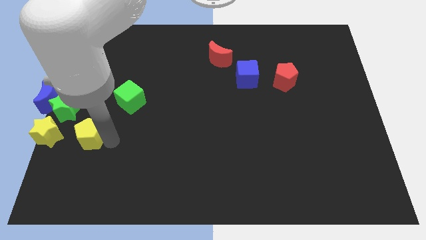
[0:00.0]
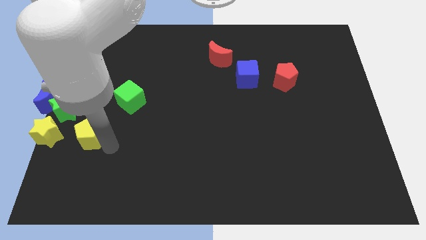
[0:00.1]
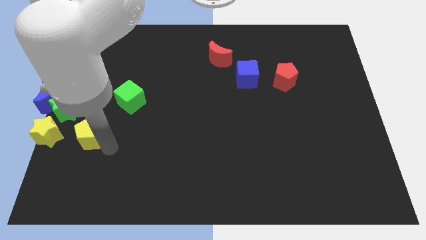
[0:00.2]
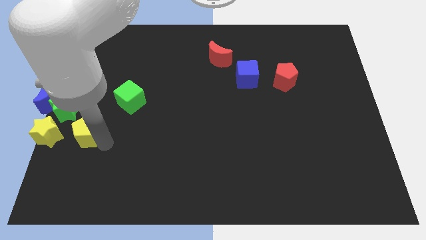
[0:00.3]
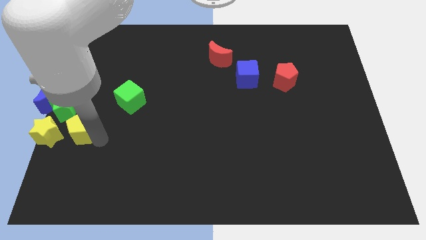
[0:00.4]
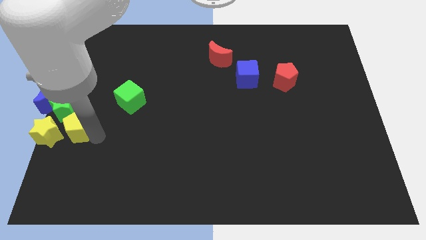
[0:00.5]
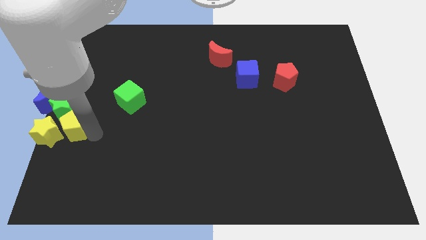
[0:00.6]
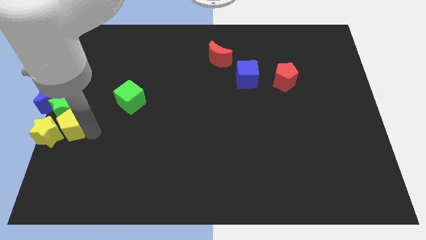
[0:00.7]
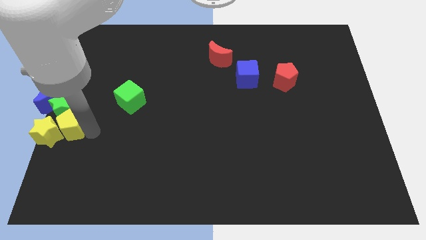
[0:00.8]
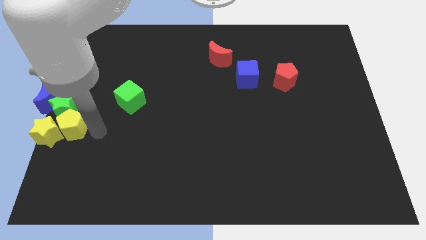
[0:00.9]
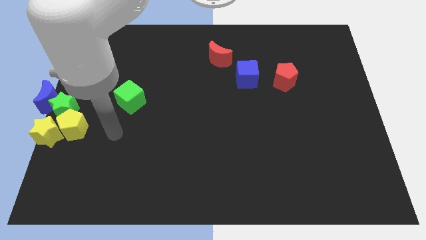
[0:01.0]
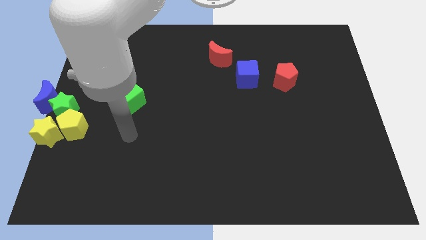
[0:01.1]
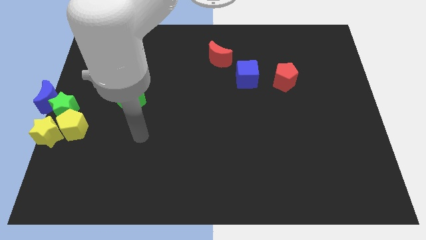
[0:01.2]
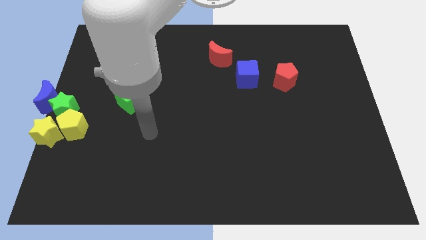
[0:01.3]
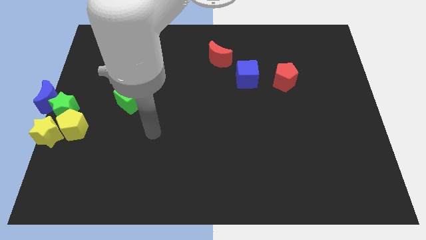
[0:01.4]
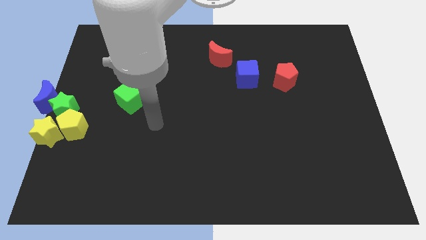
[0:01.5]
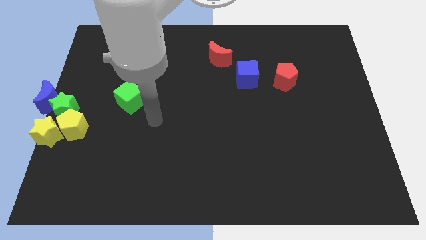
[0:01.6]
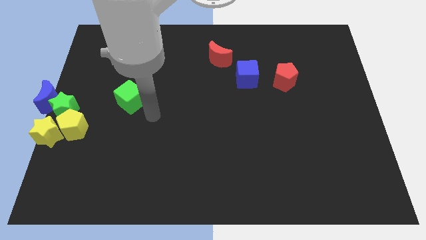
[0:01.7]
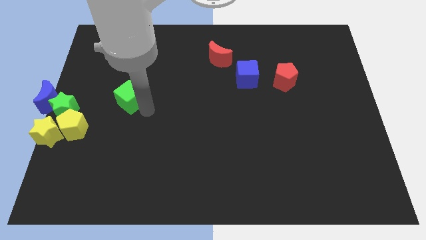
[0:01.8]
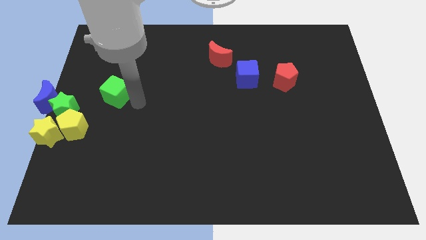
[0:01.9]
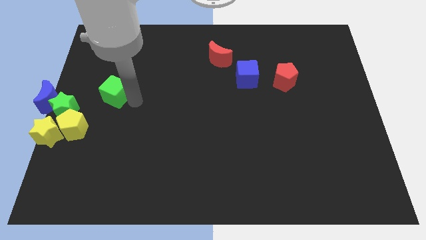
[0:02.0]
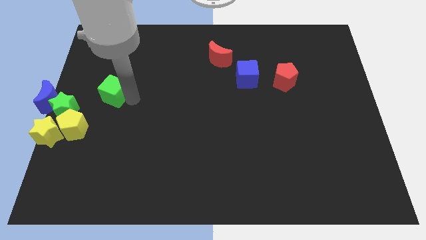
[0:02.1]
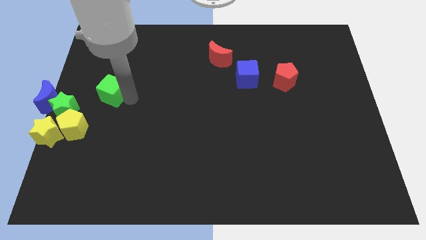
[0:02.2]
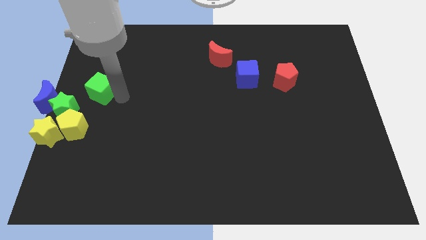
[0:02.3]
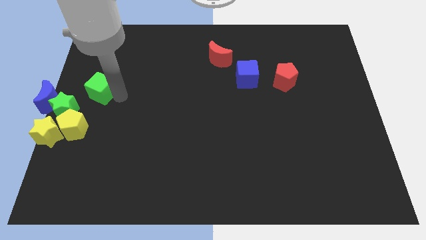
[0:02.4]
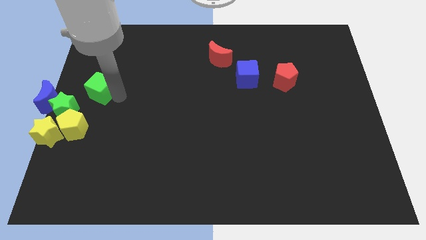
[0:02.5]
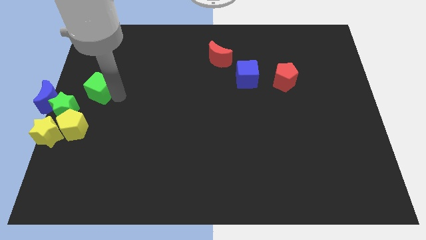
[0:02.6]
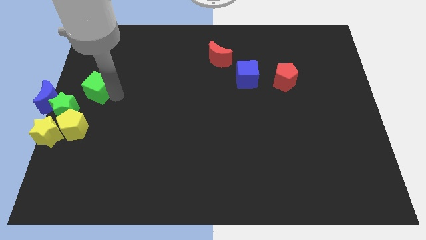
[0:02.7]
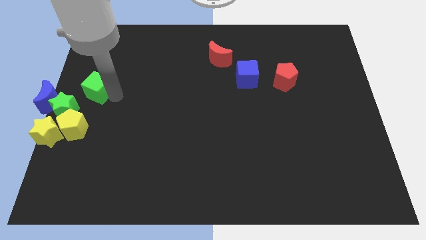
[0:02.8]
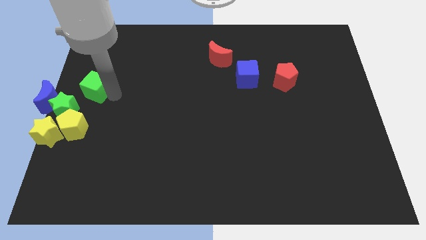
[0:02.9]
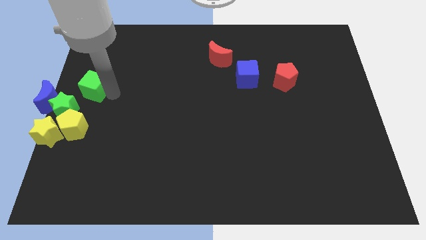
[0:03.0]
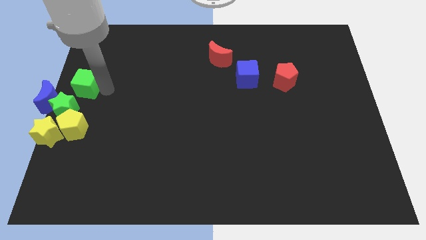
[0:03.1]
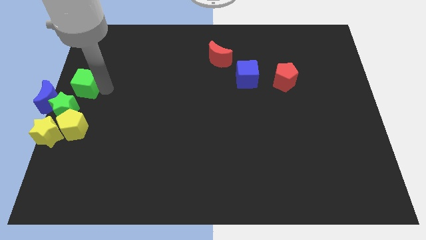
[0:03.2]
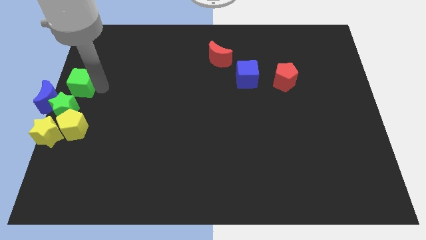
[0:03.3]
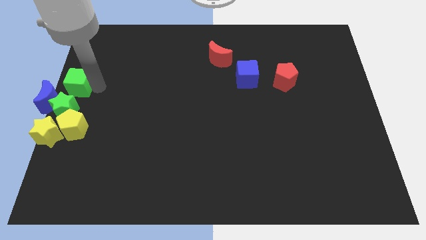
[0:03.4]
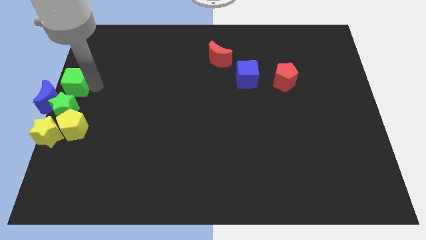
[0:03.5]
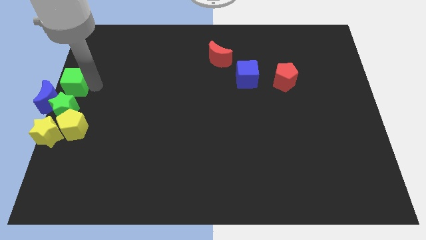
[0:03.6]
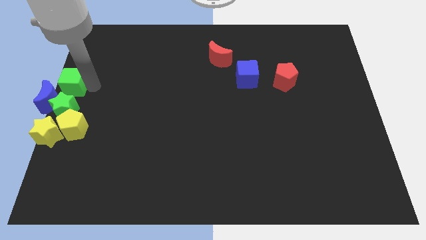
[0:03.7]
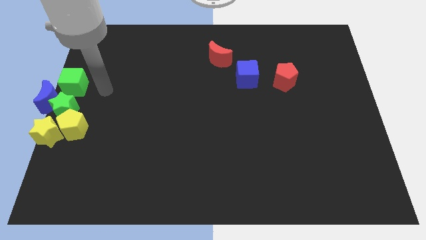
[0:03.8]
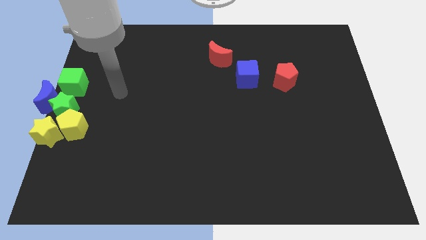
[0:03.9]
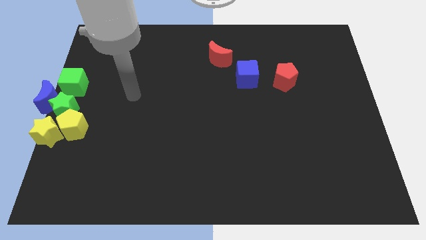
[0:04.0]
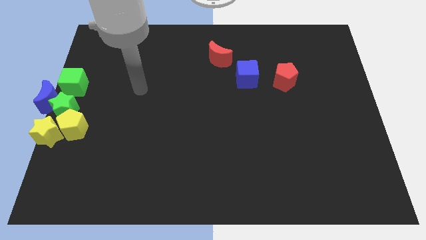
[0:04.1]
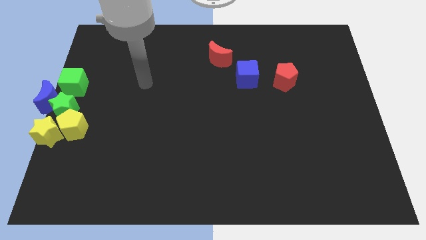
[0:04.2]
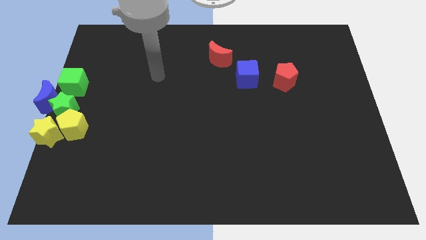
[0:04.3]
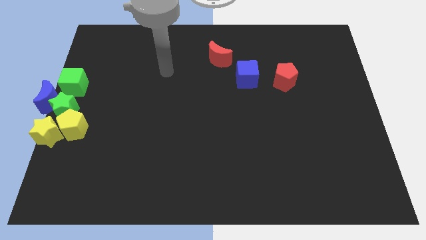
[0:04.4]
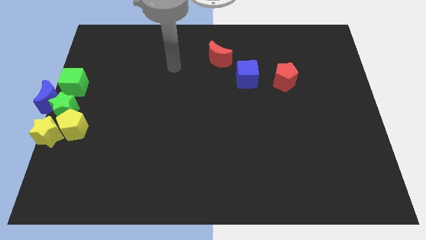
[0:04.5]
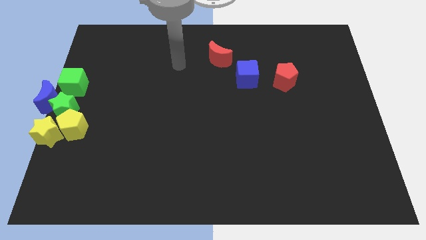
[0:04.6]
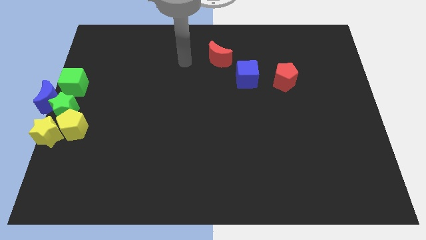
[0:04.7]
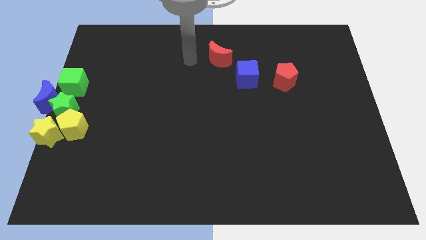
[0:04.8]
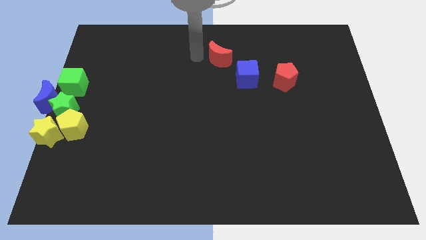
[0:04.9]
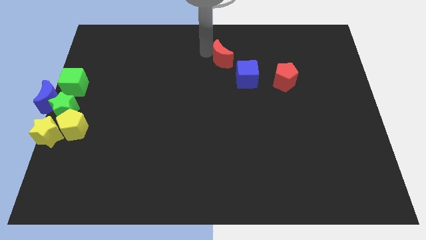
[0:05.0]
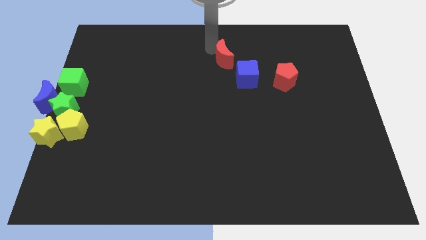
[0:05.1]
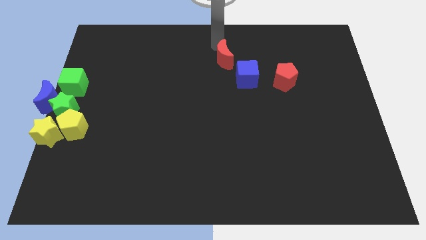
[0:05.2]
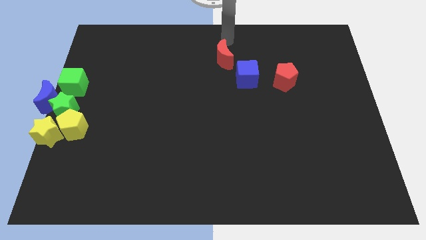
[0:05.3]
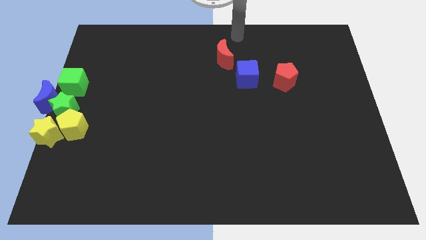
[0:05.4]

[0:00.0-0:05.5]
put the green cube above the green star

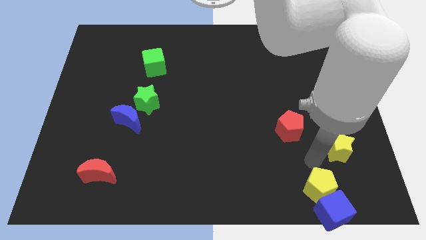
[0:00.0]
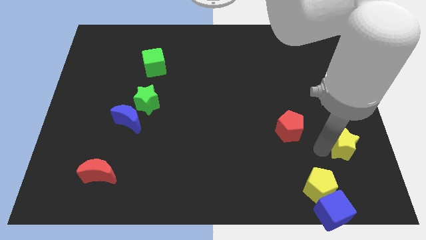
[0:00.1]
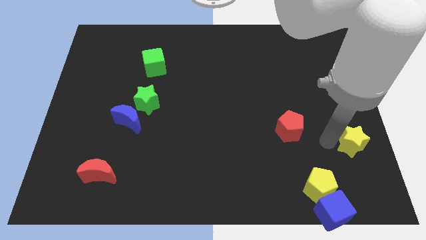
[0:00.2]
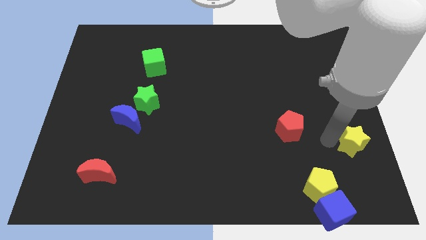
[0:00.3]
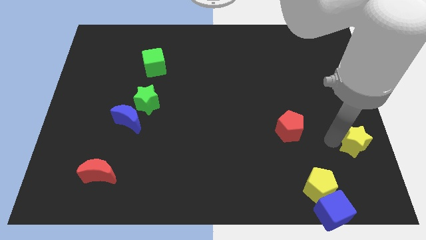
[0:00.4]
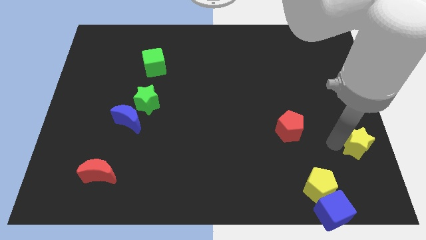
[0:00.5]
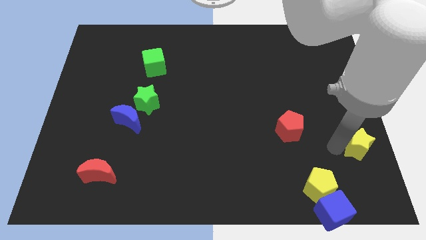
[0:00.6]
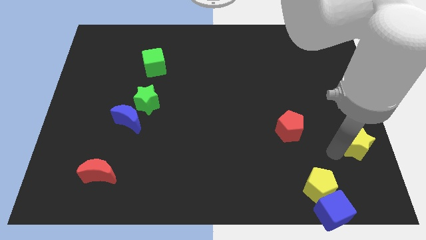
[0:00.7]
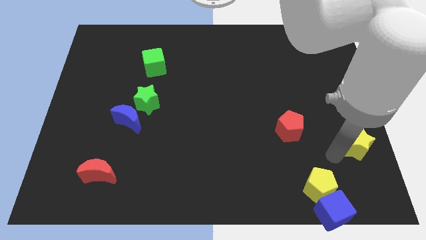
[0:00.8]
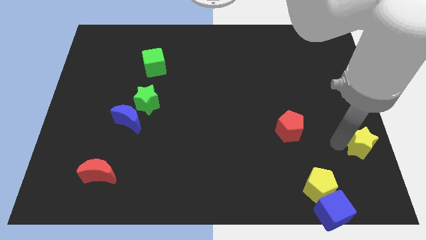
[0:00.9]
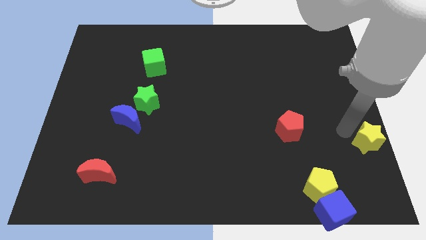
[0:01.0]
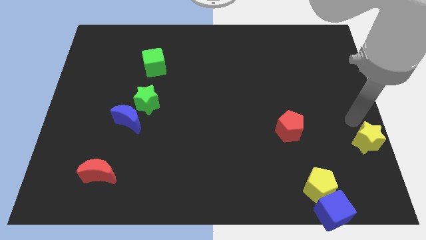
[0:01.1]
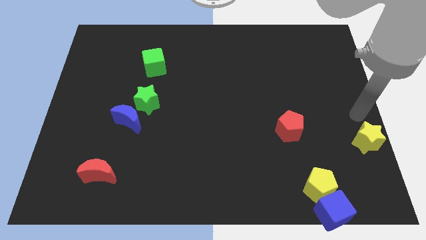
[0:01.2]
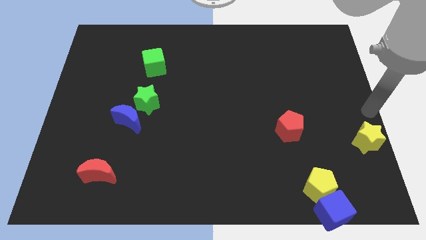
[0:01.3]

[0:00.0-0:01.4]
push the yellow star diagonally on the bottom right side of the red pentagon

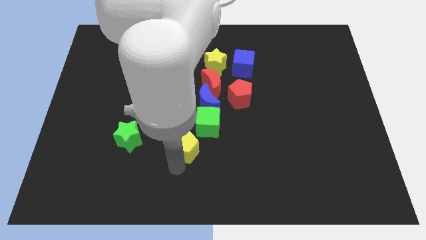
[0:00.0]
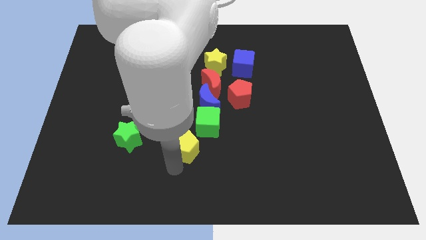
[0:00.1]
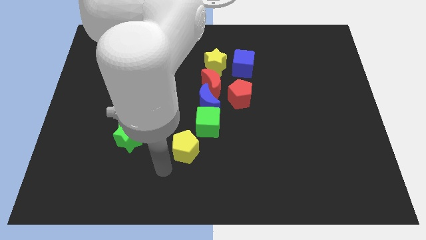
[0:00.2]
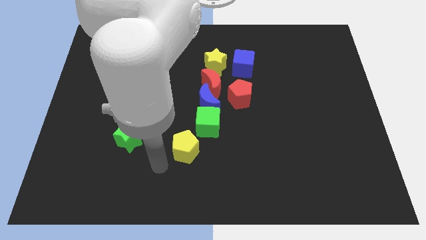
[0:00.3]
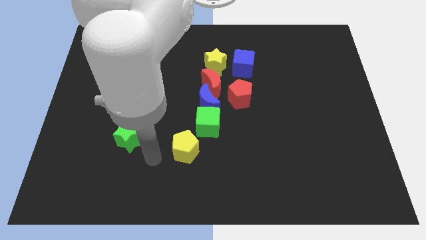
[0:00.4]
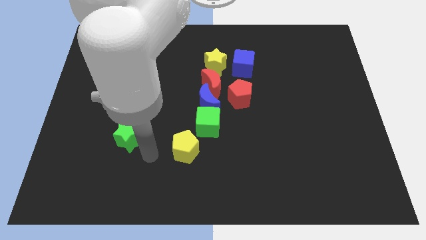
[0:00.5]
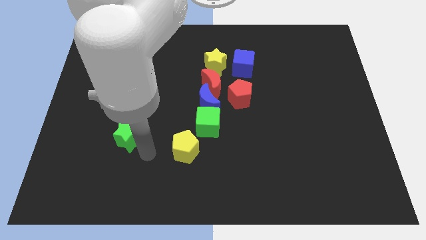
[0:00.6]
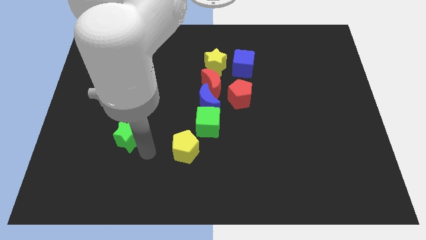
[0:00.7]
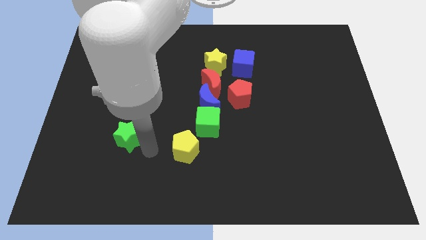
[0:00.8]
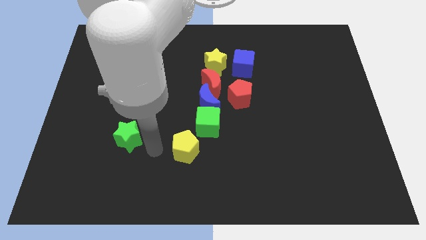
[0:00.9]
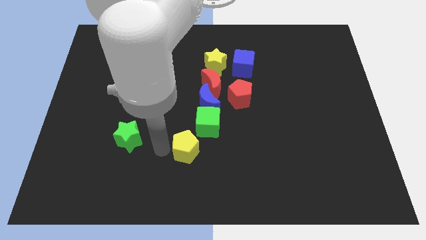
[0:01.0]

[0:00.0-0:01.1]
place your arm in between the green star and yellow pentagon

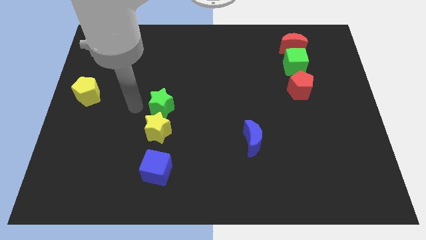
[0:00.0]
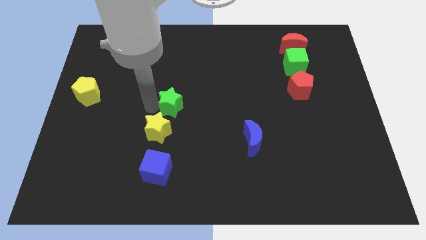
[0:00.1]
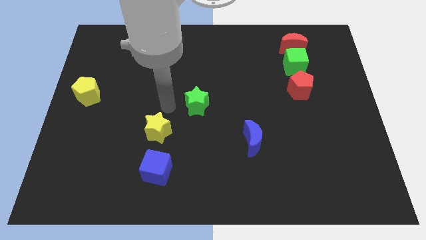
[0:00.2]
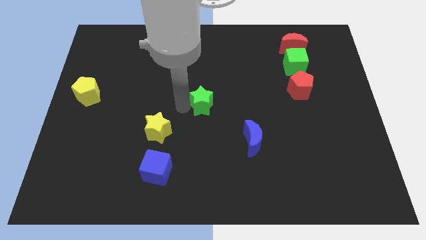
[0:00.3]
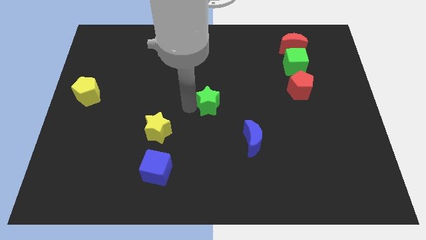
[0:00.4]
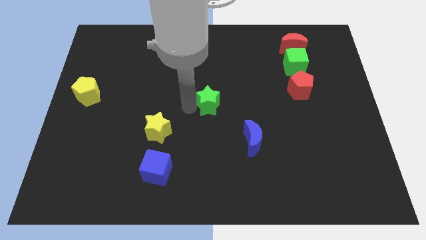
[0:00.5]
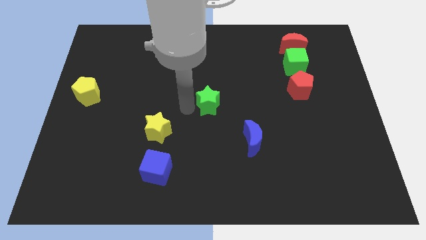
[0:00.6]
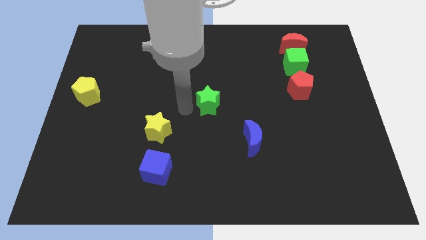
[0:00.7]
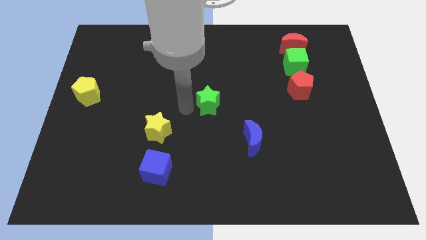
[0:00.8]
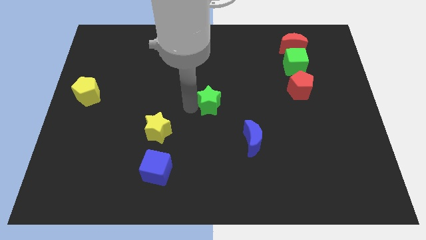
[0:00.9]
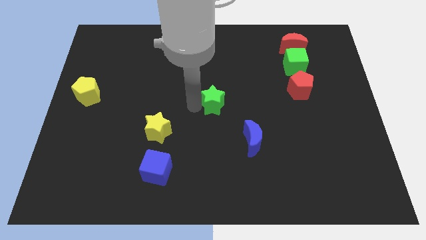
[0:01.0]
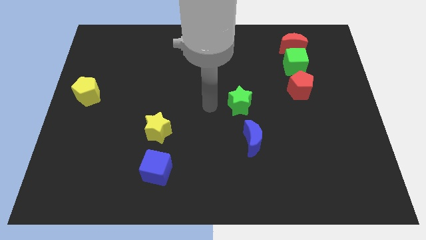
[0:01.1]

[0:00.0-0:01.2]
place the green star at the center of the board

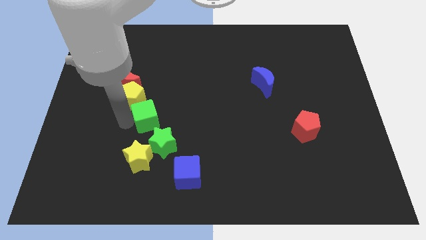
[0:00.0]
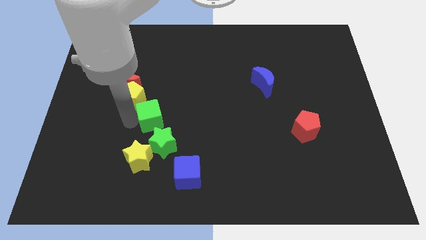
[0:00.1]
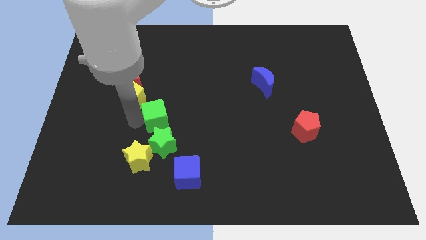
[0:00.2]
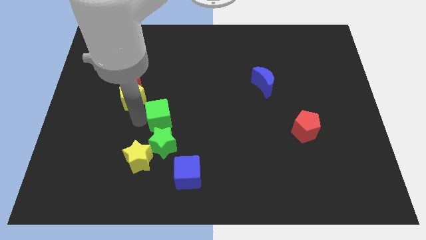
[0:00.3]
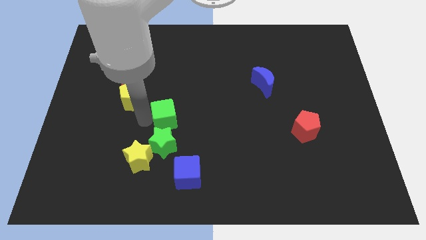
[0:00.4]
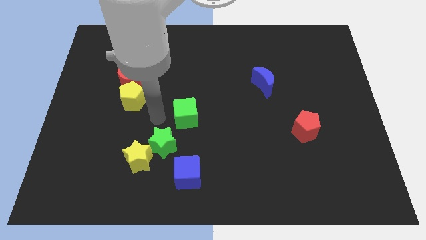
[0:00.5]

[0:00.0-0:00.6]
place the green cube vertically above the blue cube
